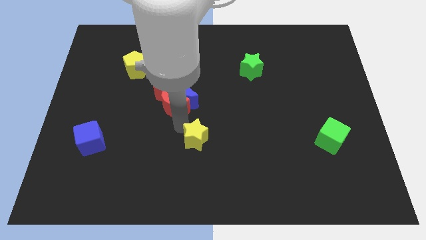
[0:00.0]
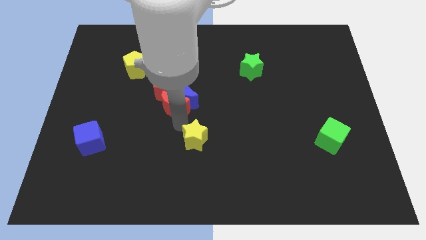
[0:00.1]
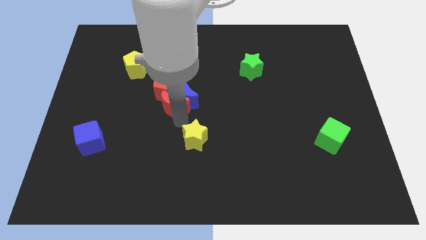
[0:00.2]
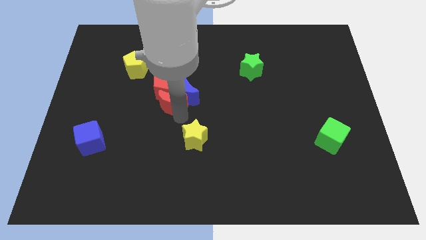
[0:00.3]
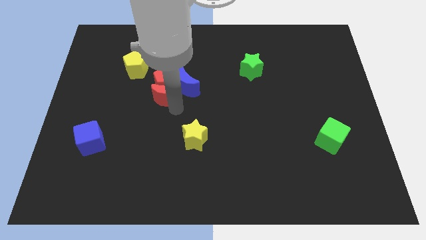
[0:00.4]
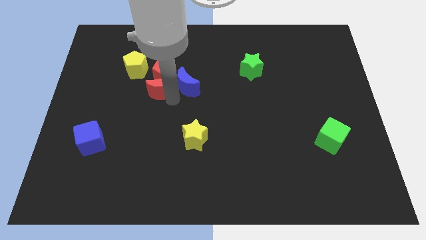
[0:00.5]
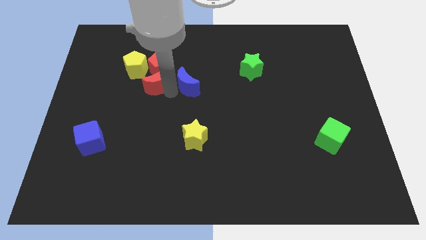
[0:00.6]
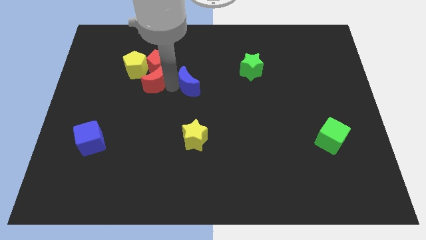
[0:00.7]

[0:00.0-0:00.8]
move the group of red blocks into the yellow pentagon

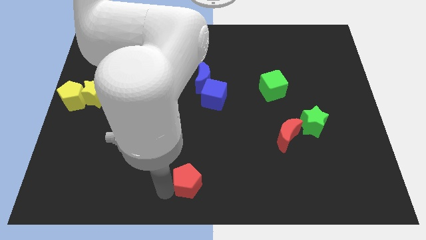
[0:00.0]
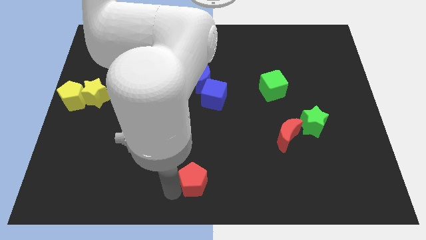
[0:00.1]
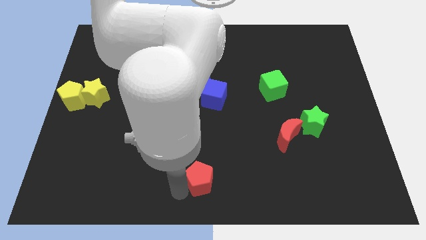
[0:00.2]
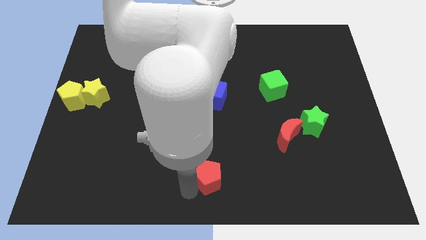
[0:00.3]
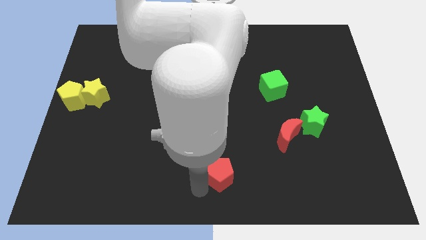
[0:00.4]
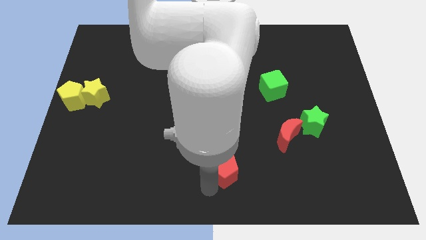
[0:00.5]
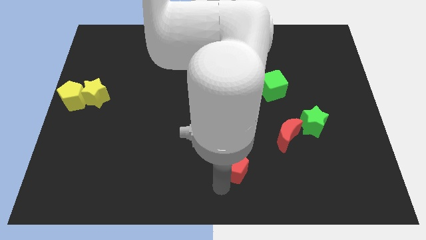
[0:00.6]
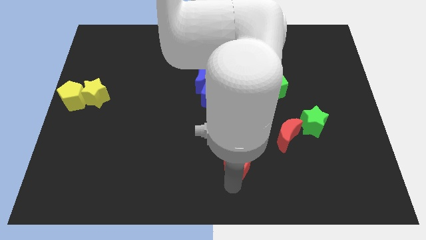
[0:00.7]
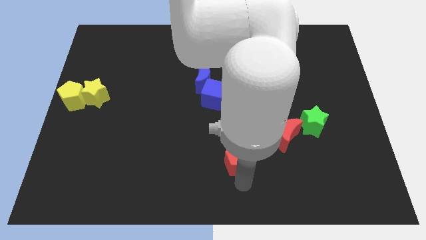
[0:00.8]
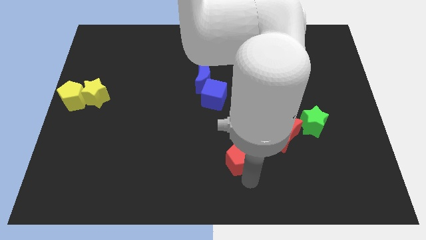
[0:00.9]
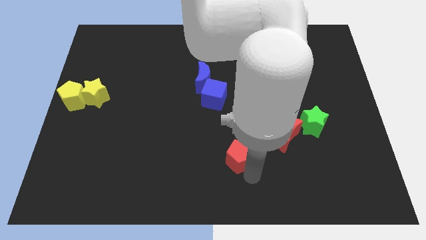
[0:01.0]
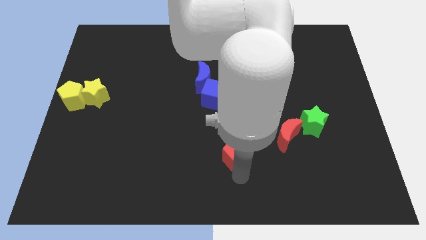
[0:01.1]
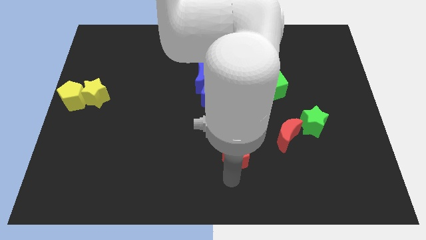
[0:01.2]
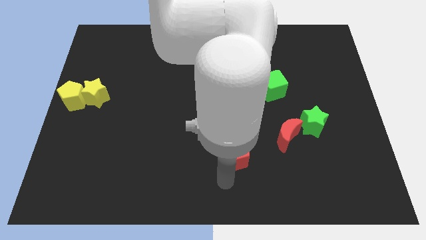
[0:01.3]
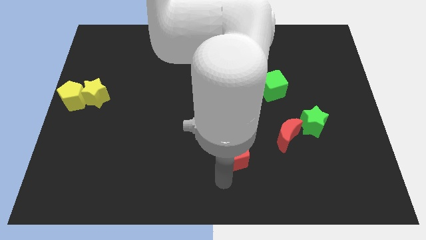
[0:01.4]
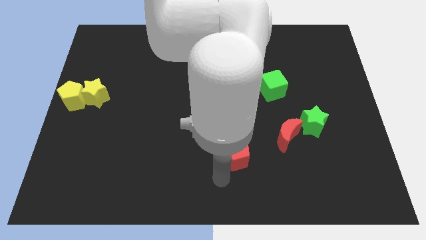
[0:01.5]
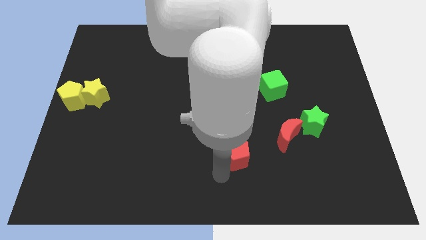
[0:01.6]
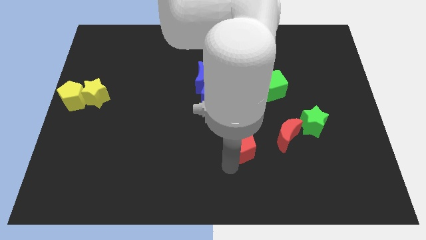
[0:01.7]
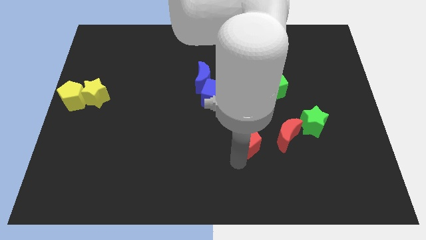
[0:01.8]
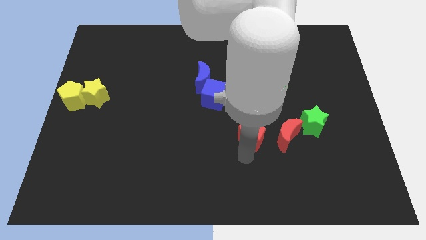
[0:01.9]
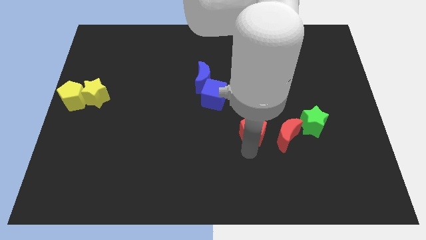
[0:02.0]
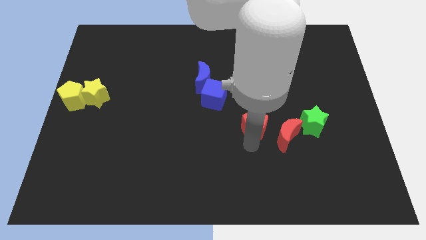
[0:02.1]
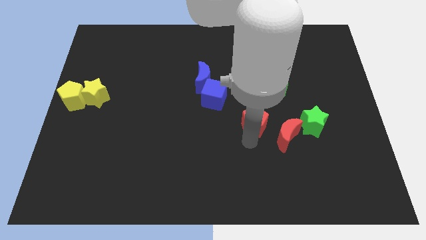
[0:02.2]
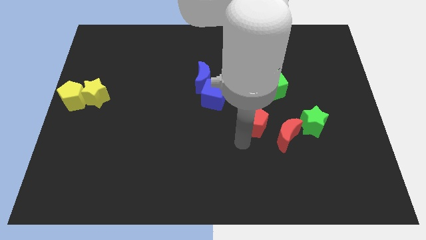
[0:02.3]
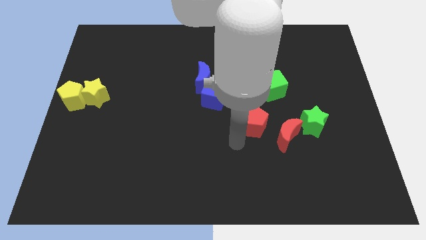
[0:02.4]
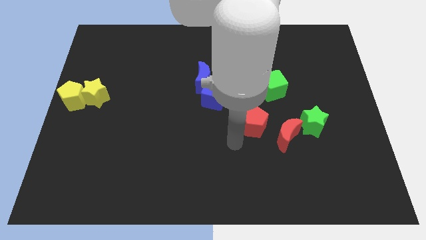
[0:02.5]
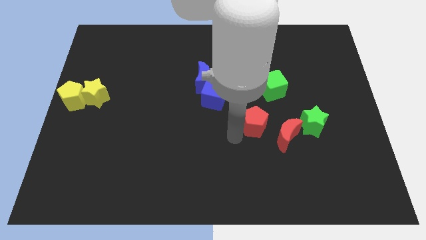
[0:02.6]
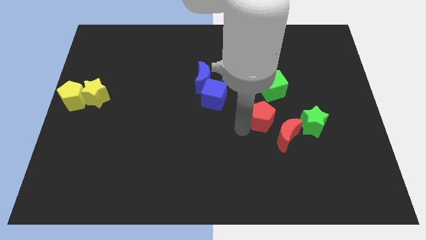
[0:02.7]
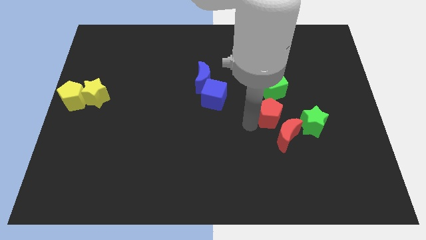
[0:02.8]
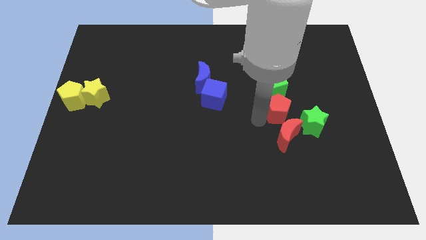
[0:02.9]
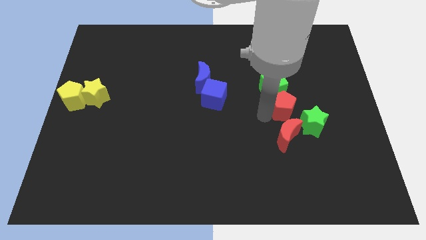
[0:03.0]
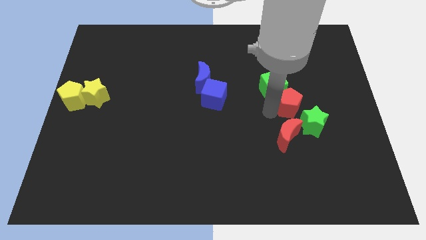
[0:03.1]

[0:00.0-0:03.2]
place the red pentagon to the top side of the red crescent

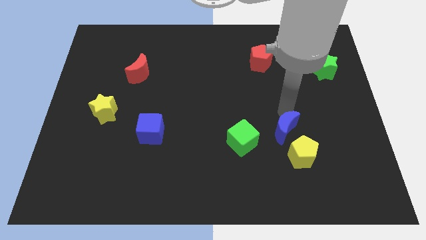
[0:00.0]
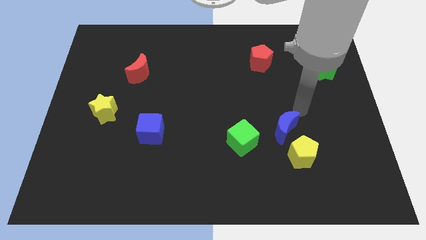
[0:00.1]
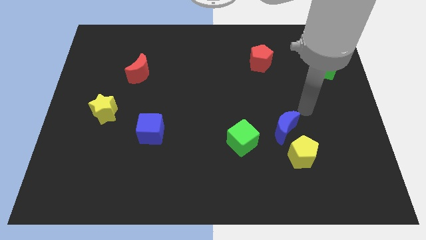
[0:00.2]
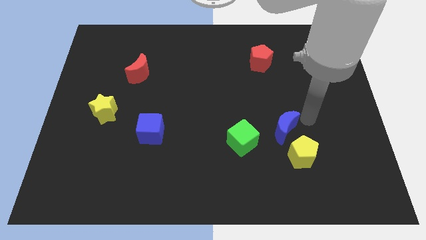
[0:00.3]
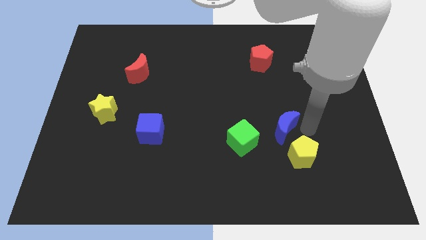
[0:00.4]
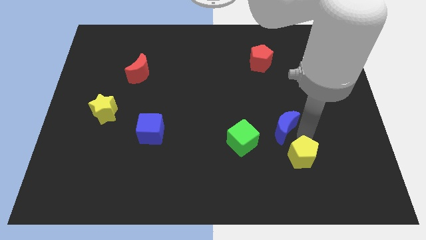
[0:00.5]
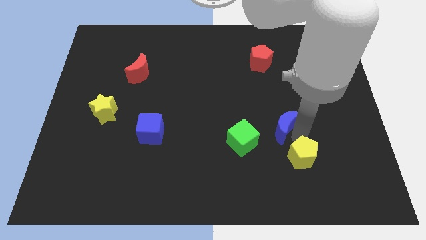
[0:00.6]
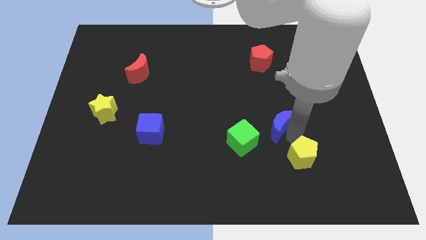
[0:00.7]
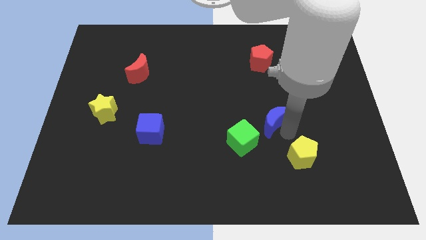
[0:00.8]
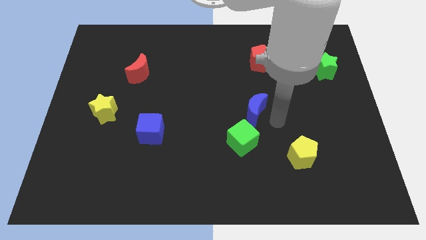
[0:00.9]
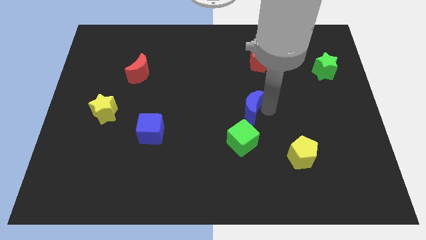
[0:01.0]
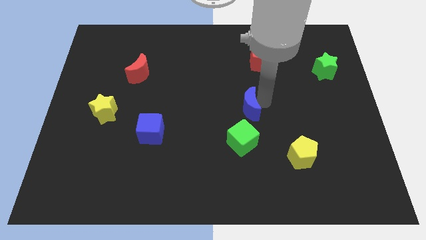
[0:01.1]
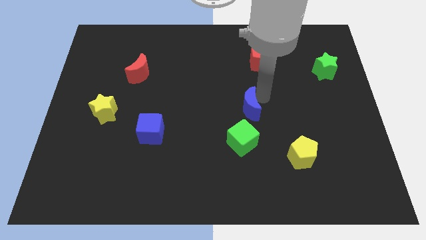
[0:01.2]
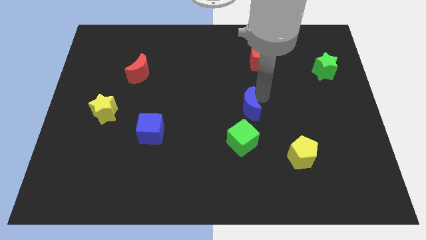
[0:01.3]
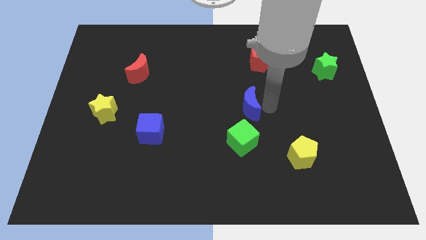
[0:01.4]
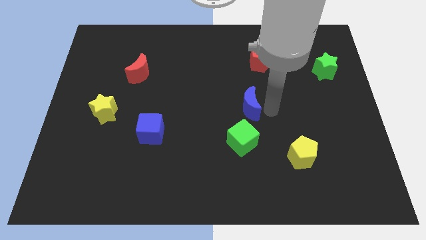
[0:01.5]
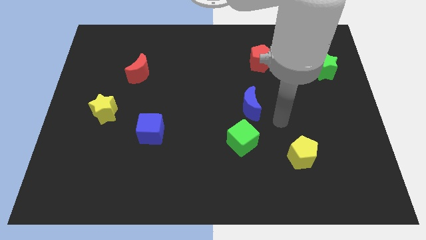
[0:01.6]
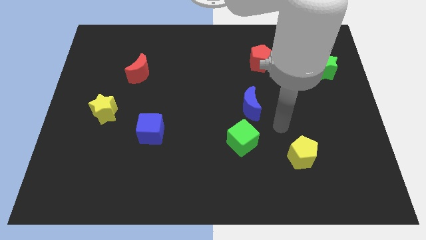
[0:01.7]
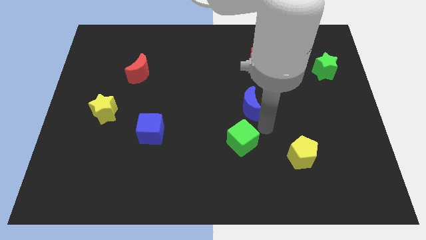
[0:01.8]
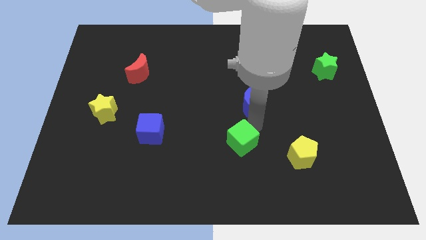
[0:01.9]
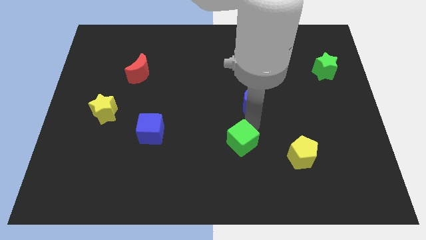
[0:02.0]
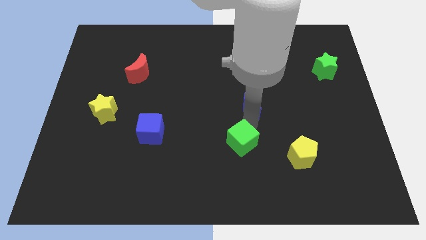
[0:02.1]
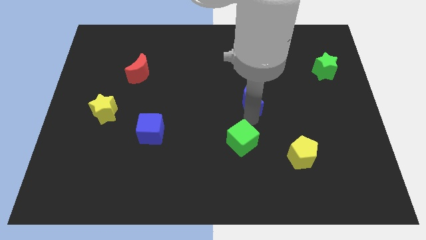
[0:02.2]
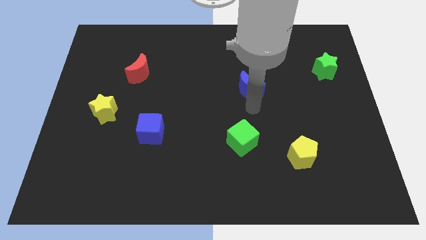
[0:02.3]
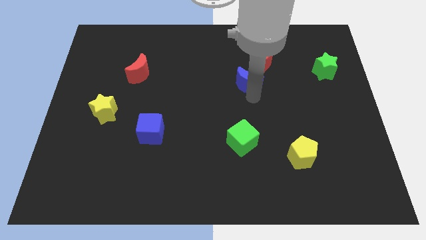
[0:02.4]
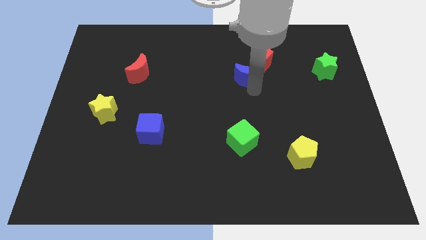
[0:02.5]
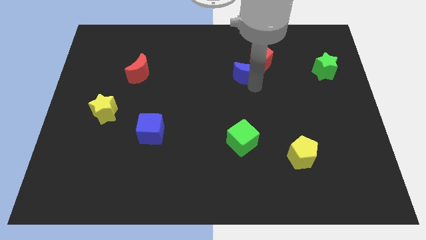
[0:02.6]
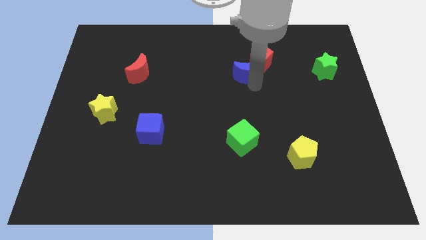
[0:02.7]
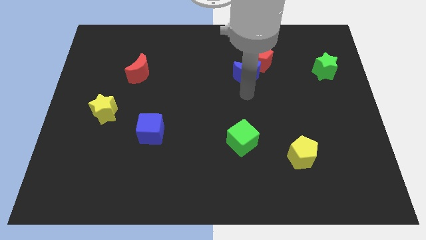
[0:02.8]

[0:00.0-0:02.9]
push blue crescent close to the red pentagon

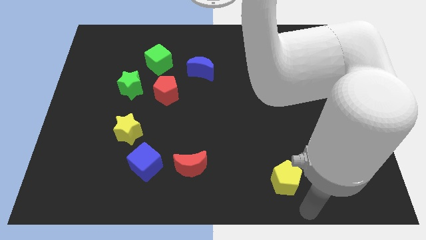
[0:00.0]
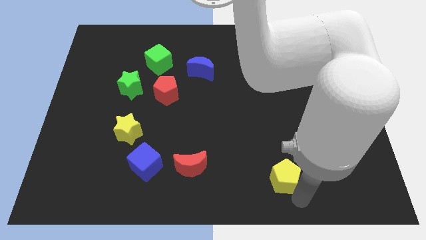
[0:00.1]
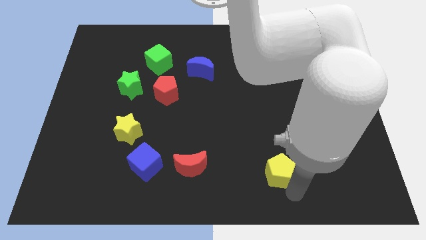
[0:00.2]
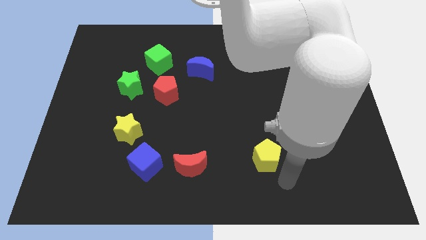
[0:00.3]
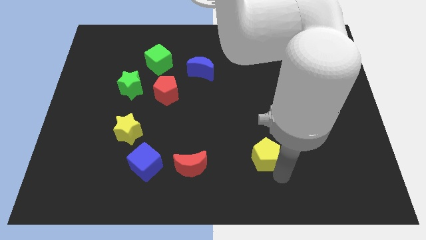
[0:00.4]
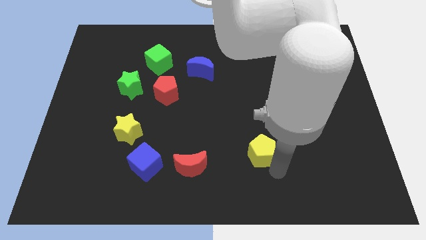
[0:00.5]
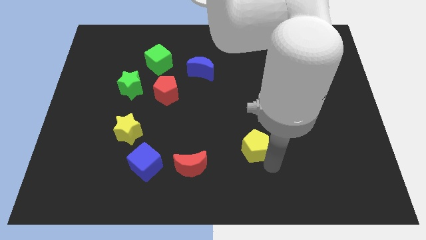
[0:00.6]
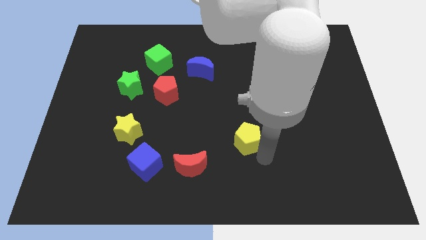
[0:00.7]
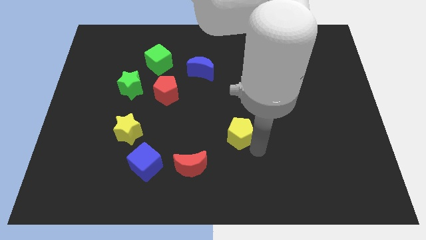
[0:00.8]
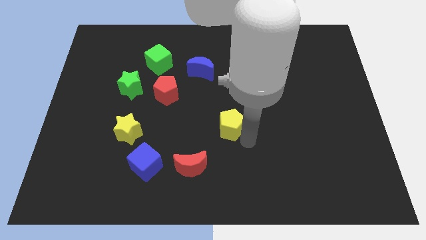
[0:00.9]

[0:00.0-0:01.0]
place the yellow pentagon diagonally top right to red moon

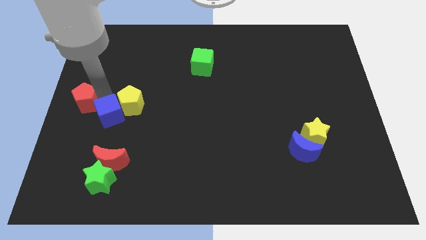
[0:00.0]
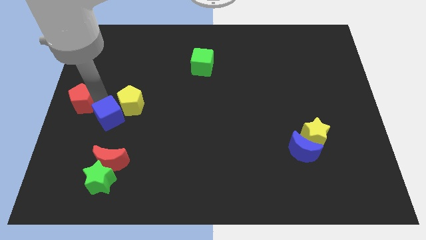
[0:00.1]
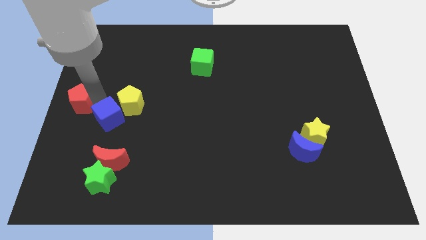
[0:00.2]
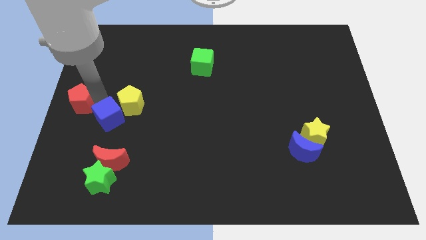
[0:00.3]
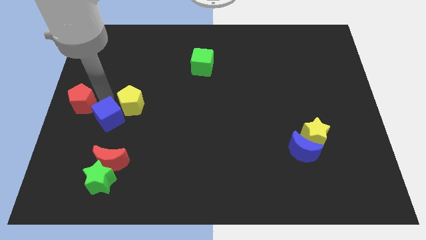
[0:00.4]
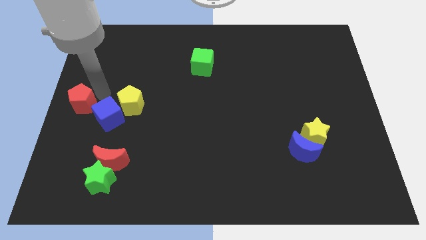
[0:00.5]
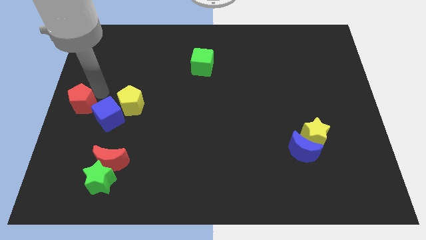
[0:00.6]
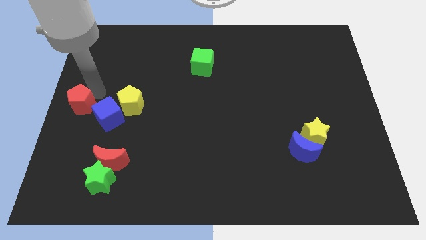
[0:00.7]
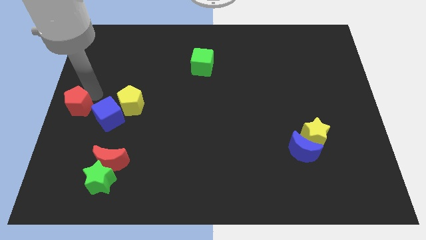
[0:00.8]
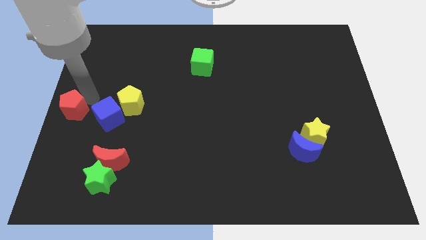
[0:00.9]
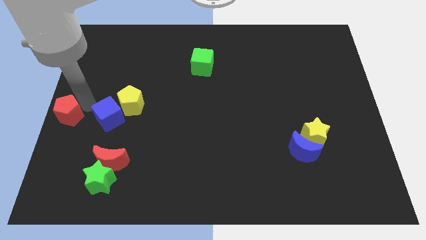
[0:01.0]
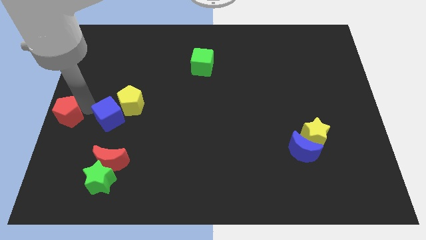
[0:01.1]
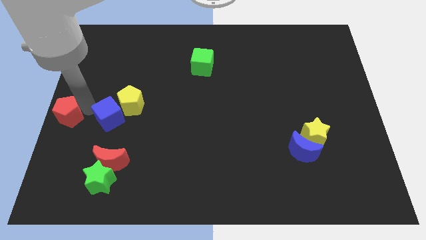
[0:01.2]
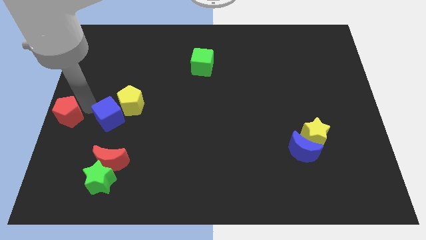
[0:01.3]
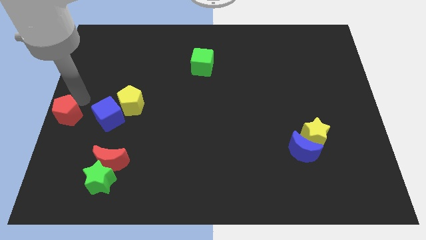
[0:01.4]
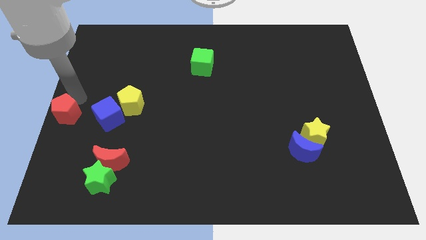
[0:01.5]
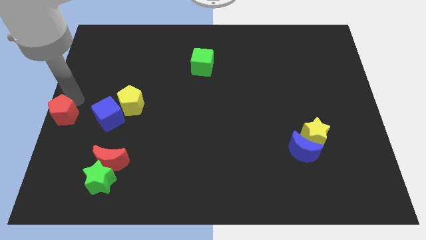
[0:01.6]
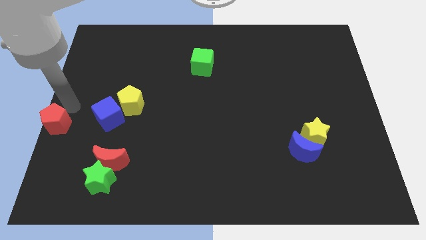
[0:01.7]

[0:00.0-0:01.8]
place the red pentagon at the center left
